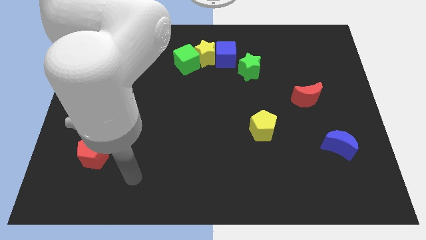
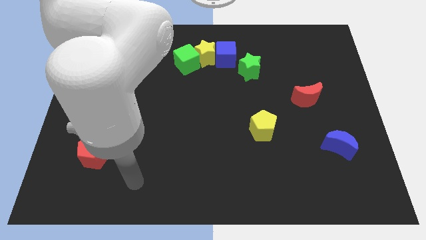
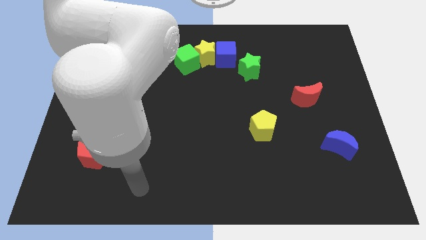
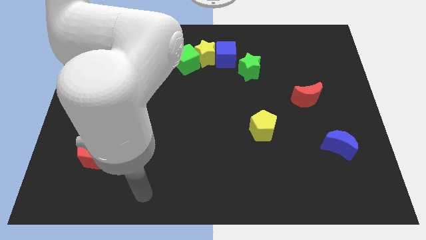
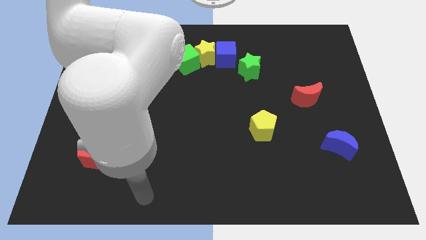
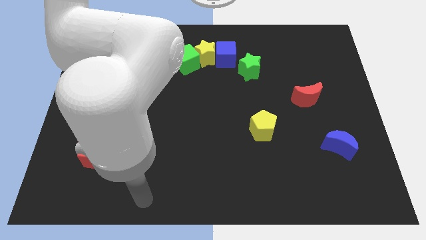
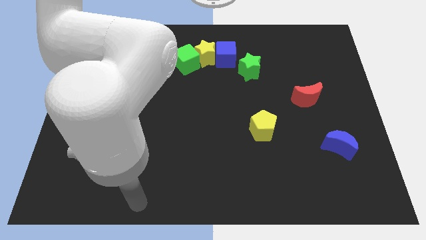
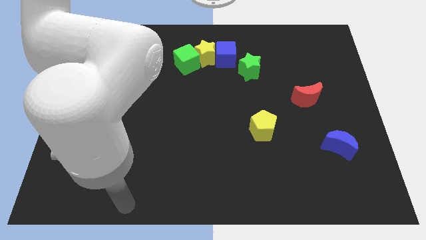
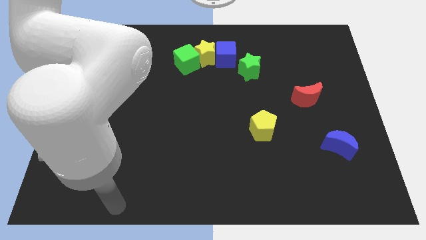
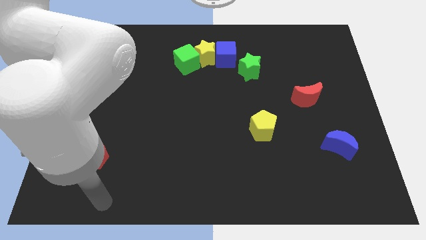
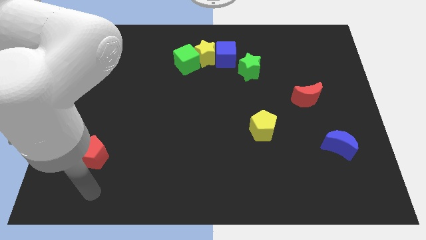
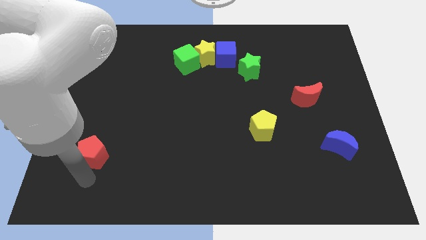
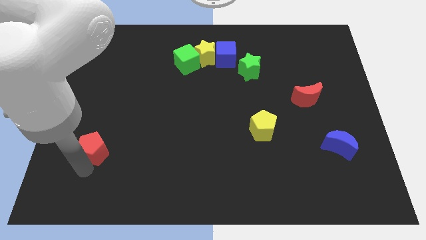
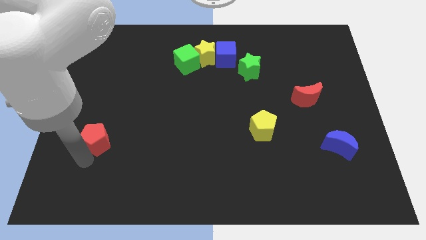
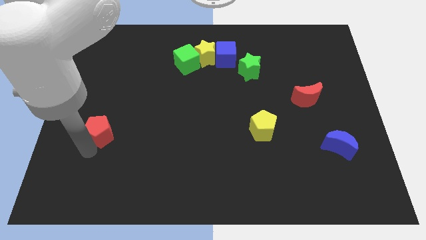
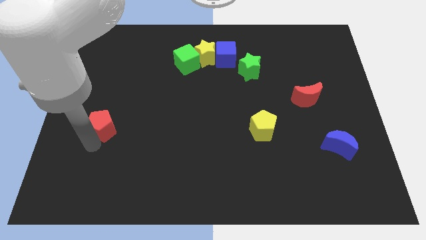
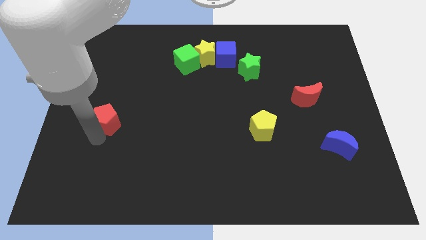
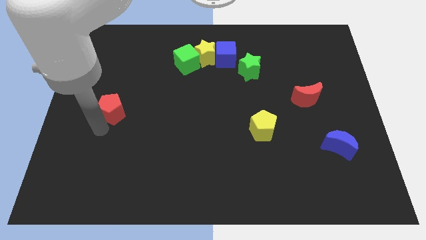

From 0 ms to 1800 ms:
push the red pentagon towards the top side

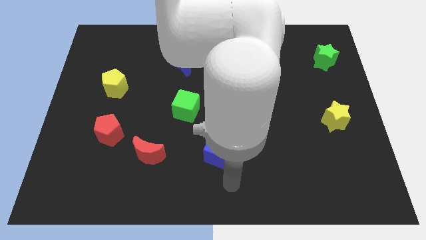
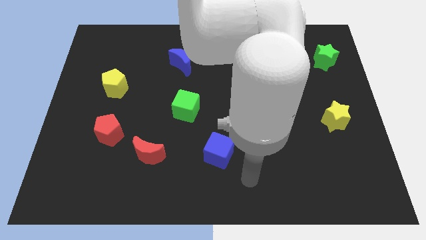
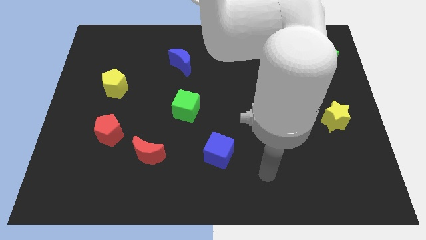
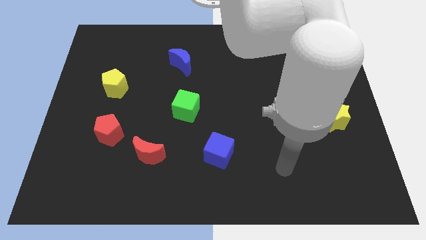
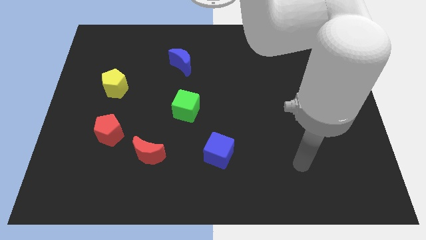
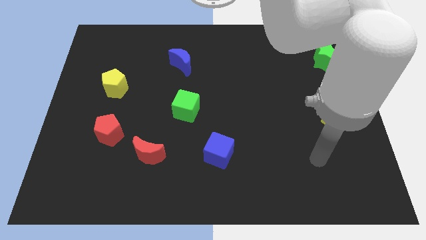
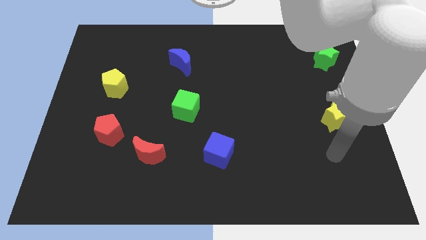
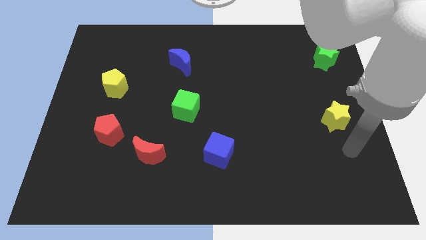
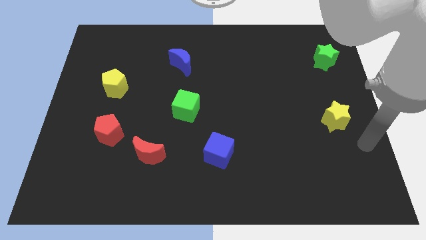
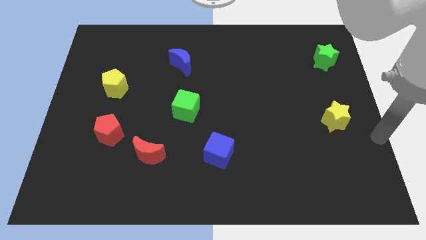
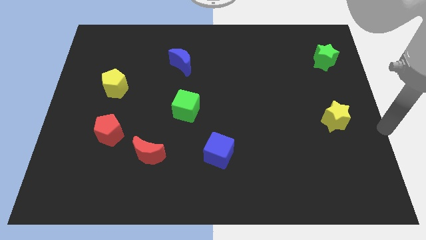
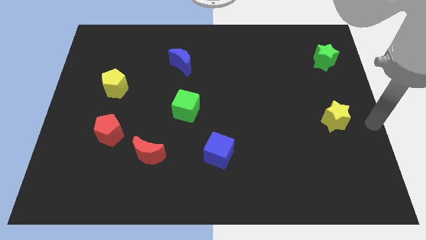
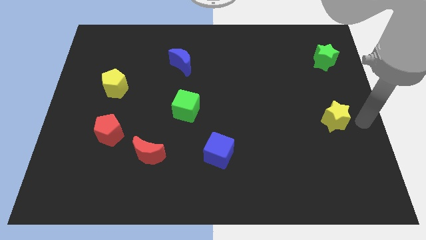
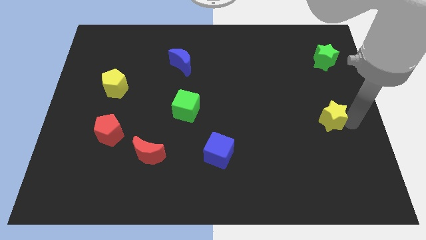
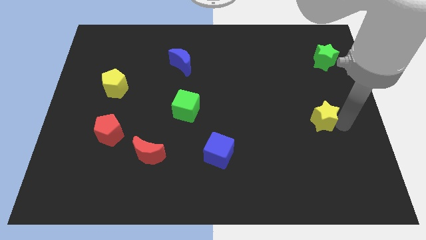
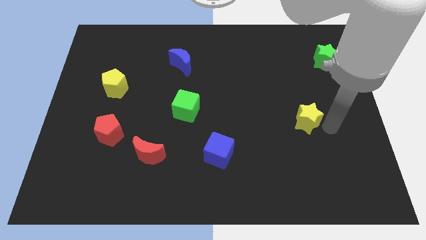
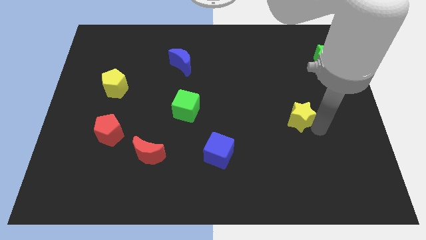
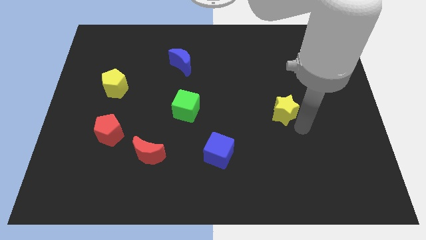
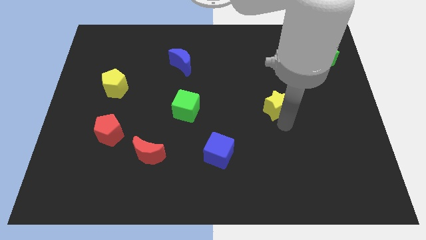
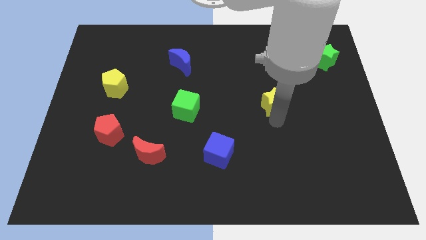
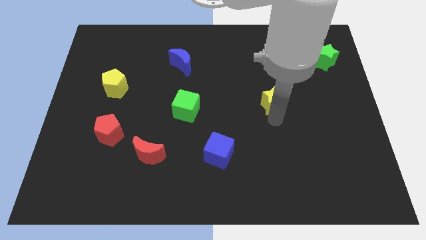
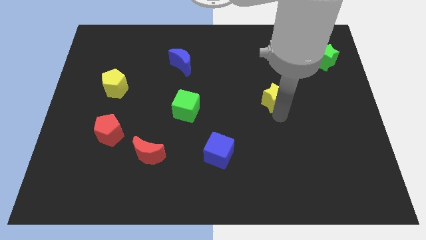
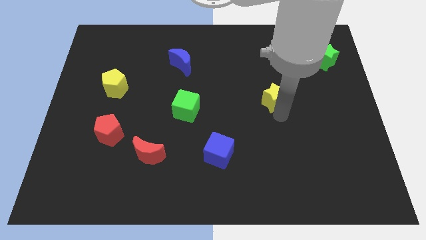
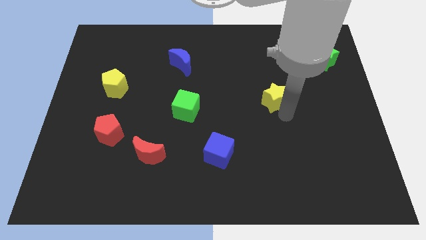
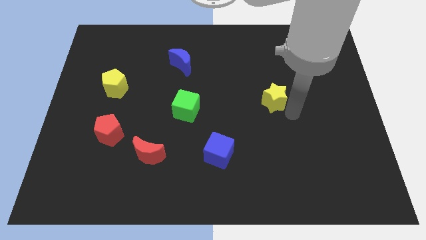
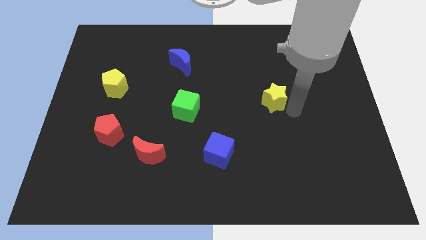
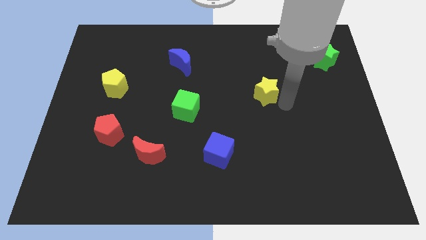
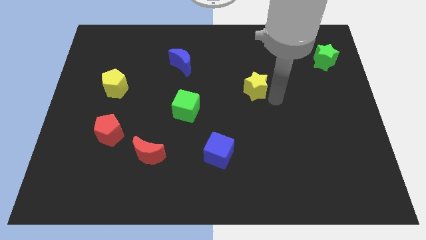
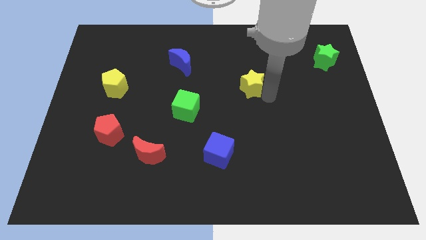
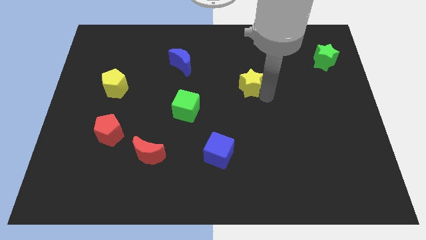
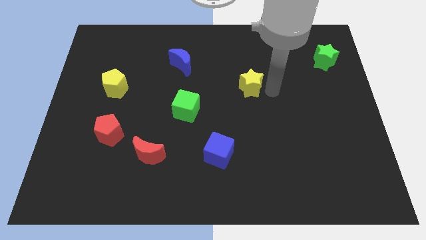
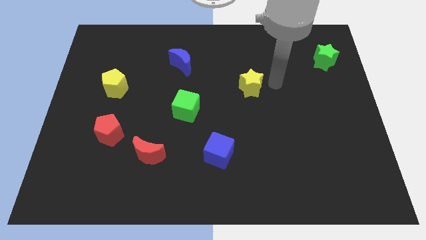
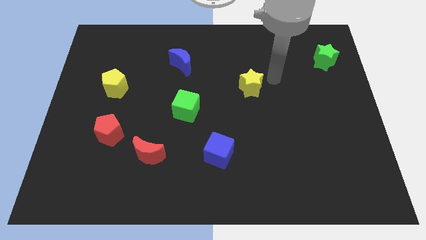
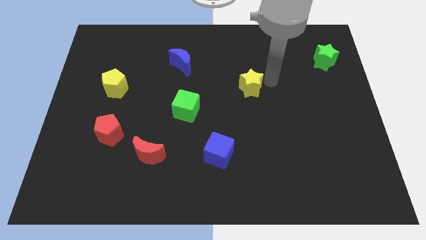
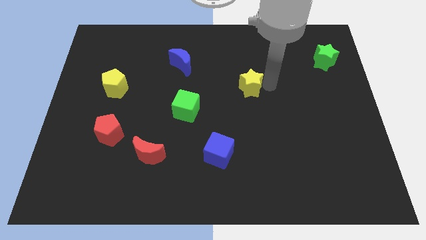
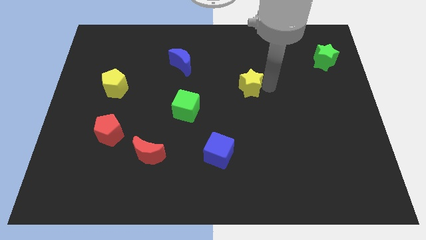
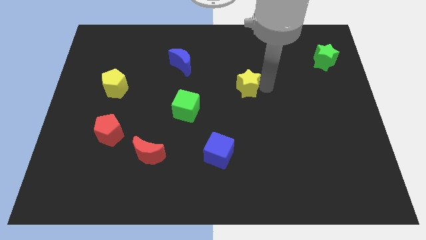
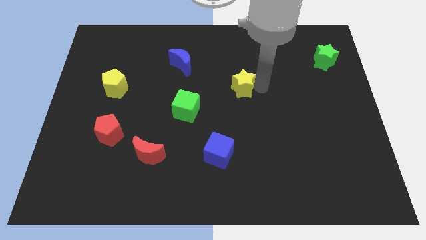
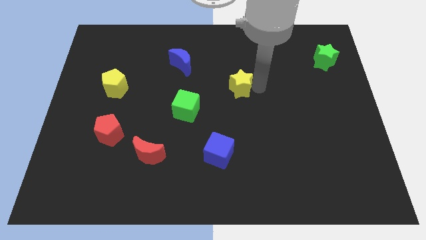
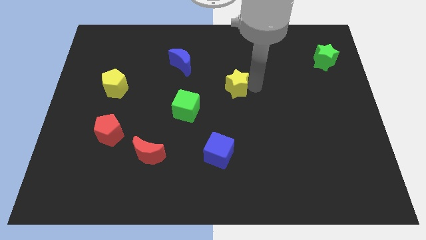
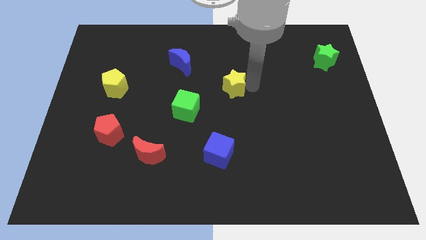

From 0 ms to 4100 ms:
place the yellow star vertically above the blue cube

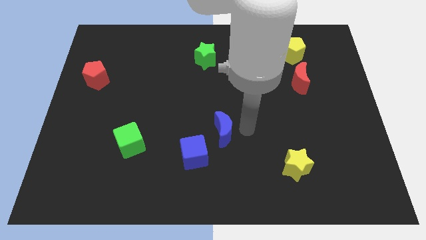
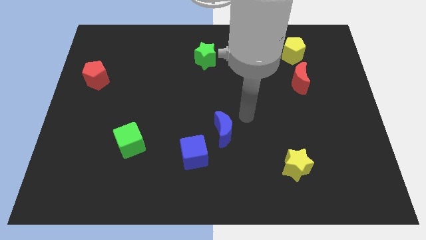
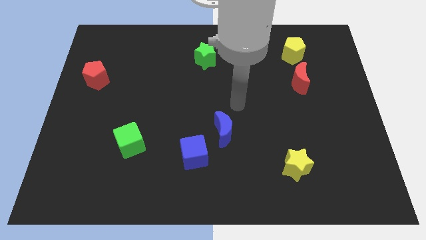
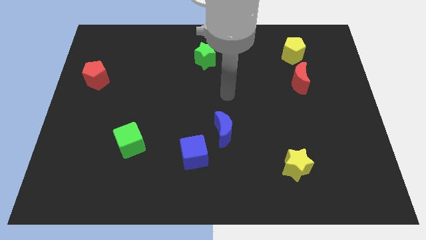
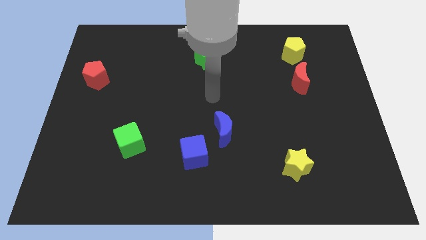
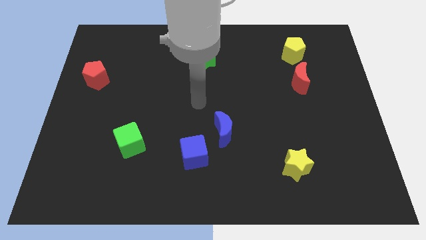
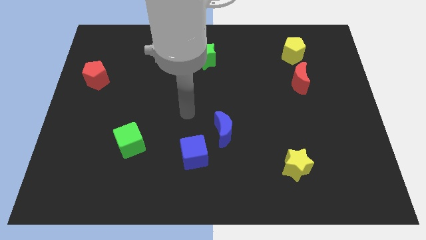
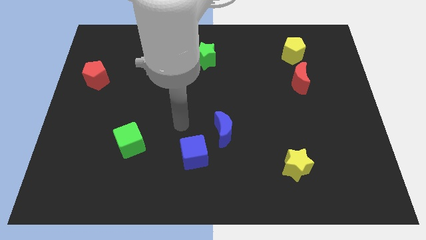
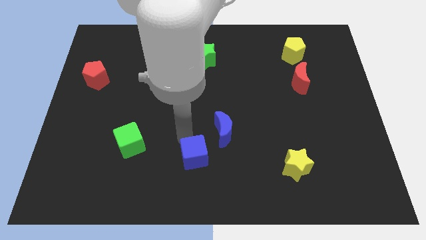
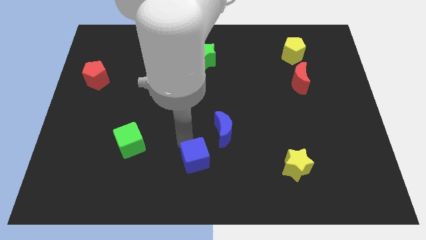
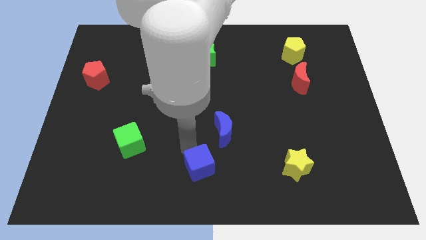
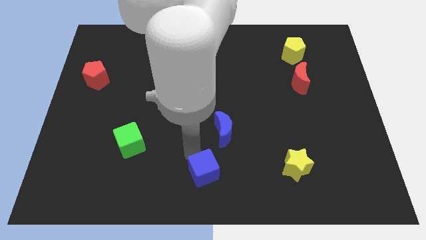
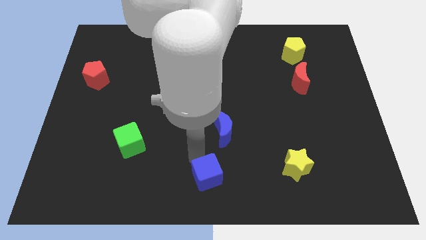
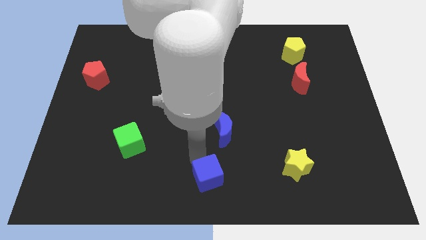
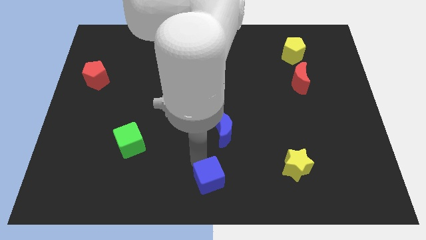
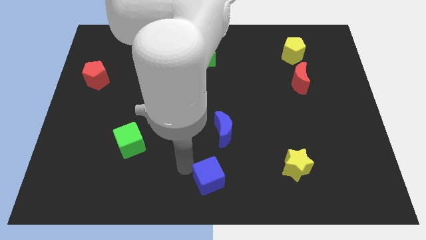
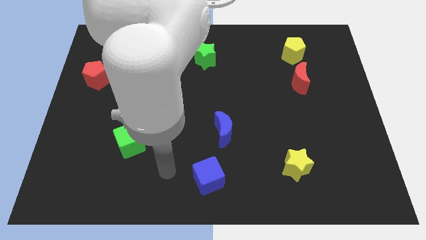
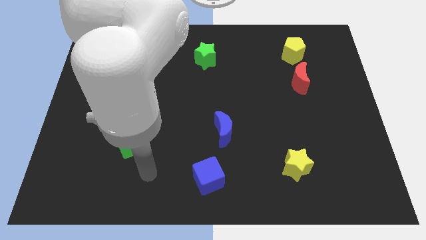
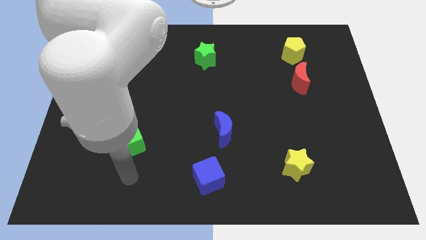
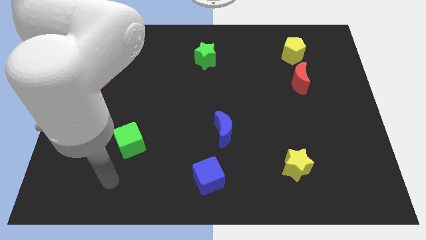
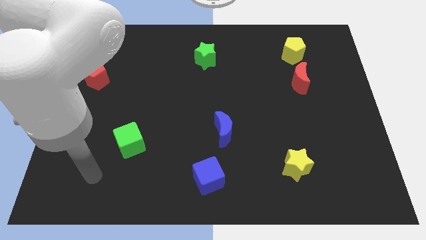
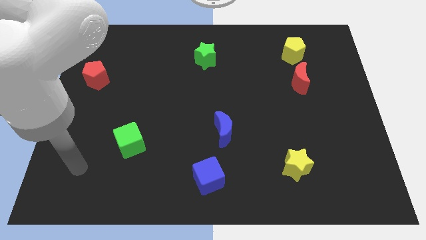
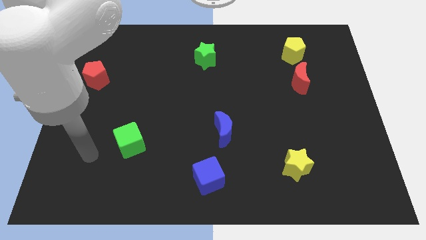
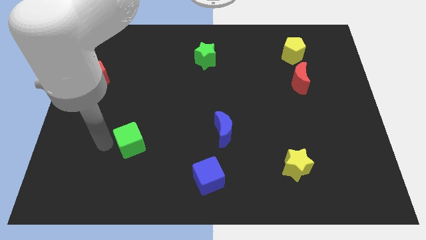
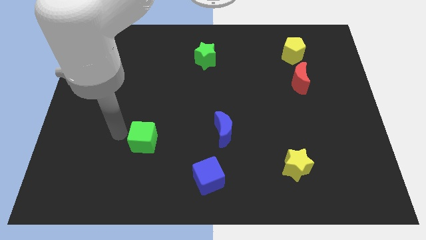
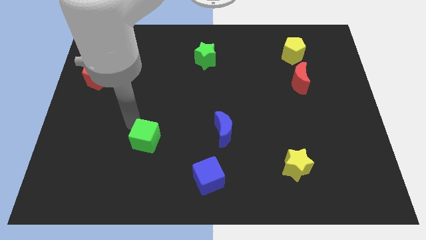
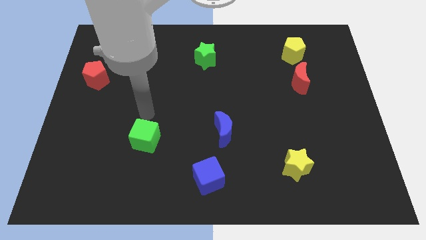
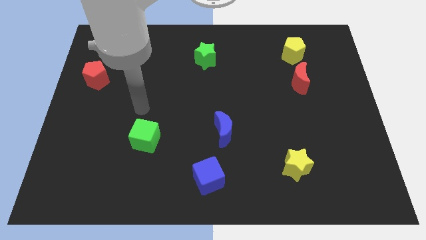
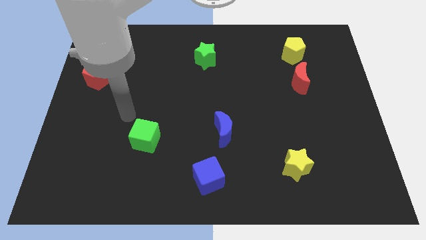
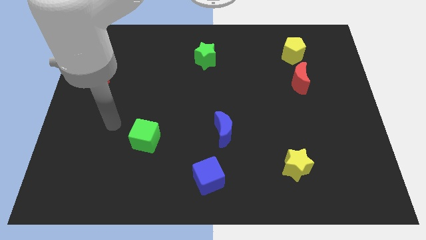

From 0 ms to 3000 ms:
move the blue cube towards the bottom center of the board

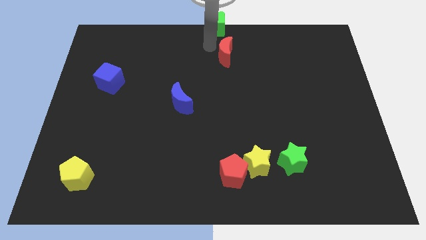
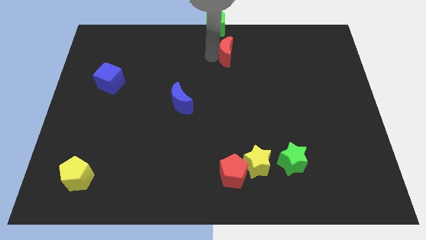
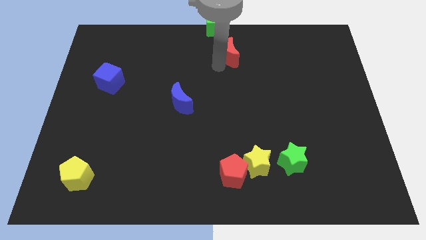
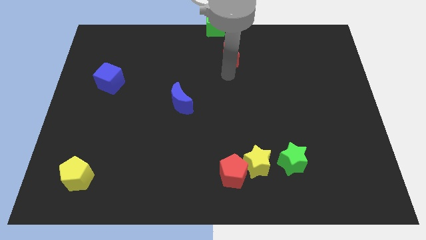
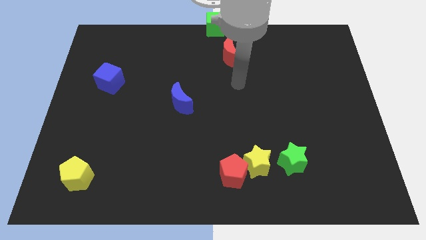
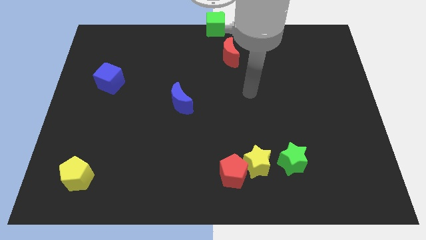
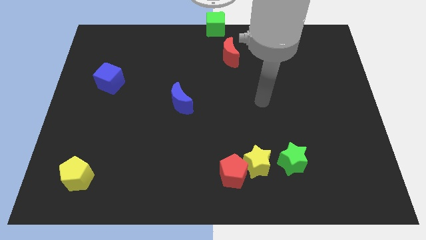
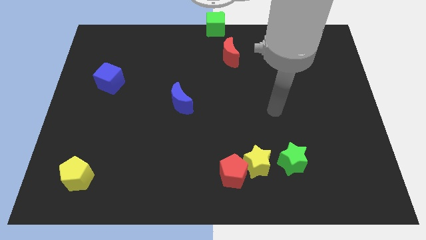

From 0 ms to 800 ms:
touch the red moon
